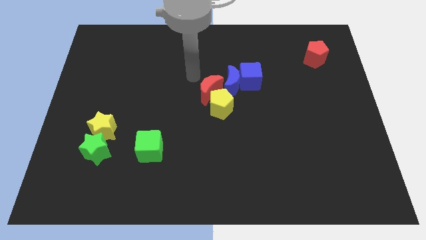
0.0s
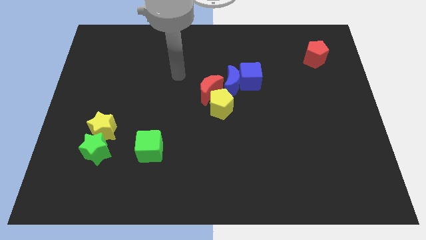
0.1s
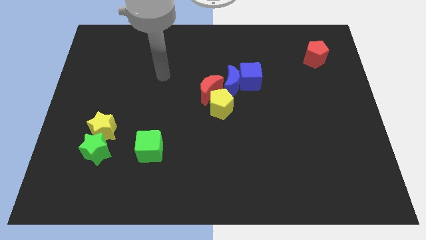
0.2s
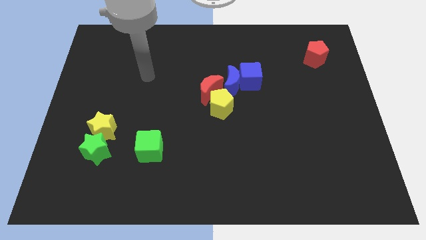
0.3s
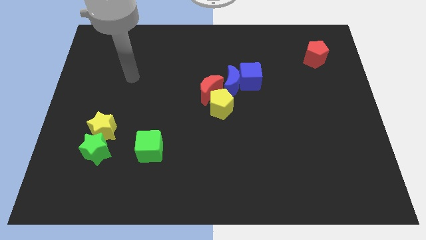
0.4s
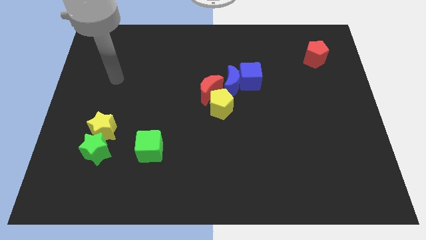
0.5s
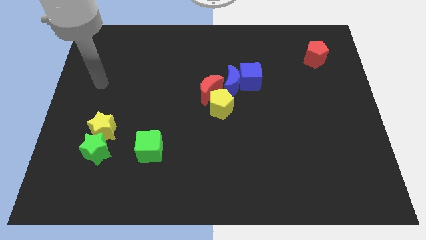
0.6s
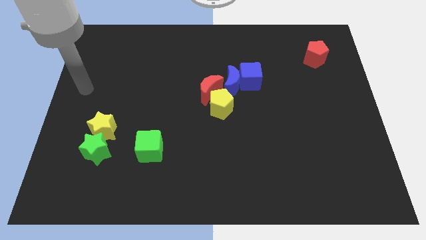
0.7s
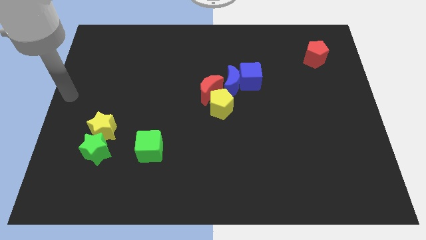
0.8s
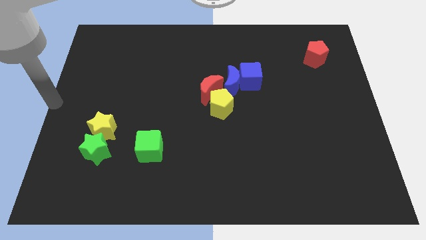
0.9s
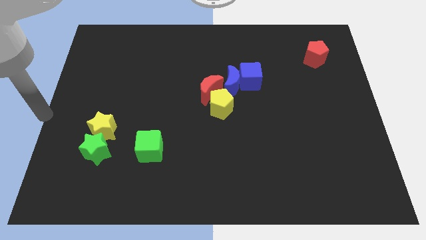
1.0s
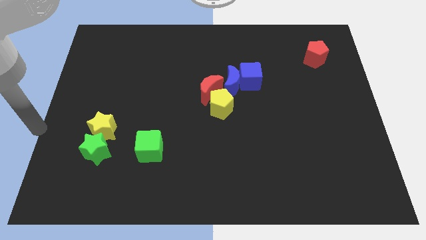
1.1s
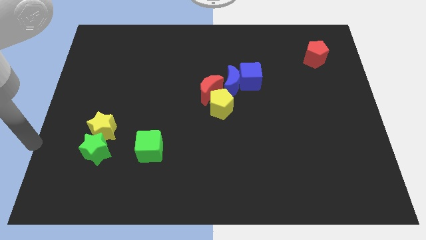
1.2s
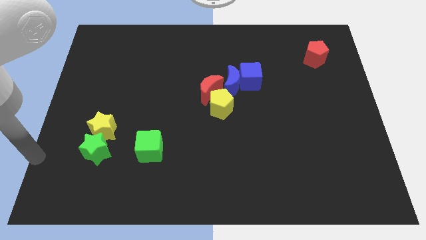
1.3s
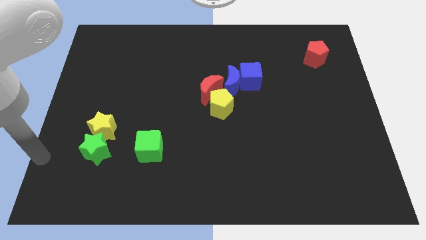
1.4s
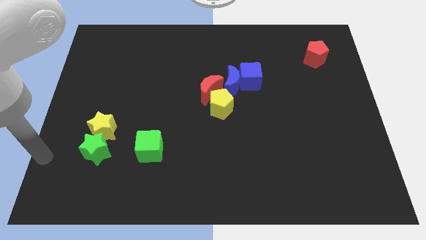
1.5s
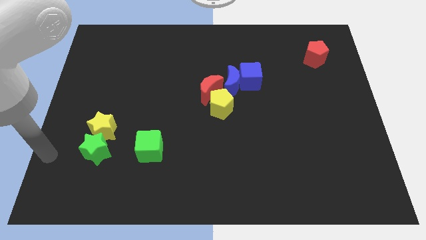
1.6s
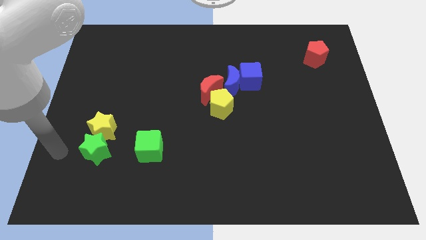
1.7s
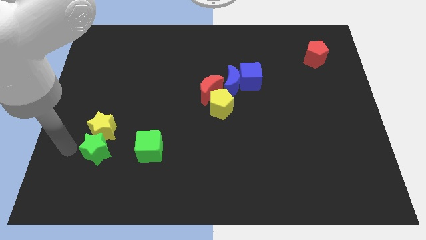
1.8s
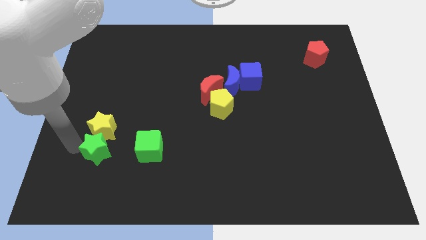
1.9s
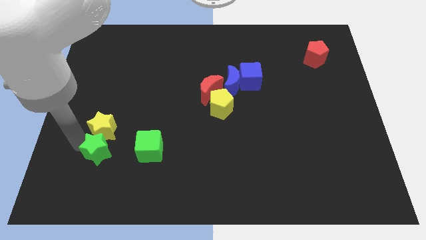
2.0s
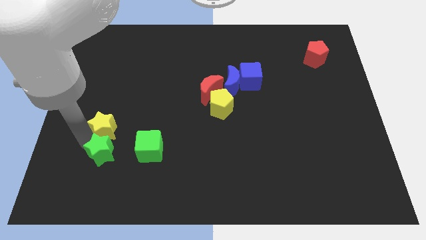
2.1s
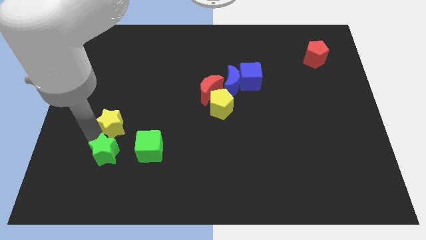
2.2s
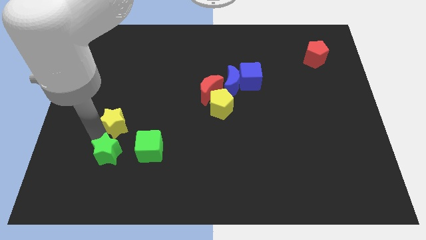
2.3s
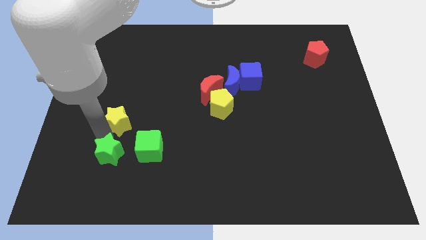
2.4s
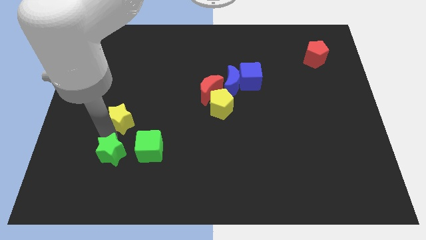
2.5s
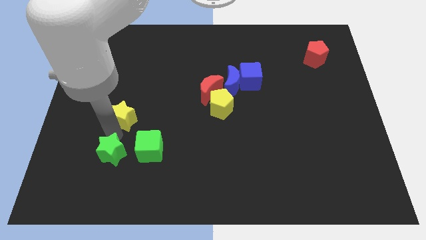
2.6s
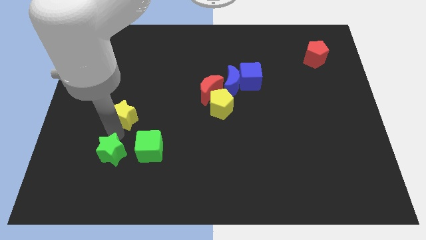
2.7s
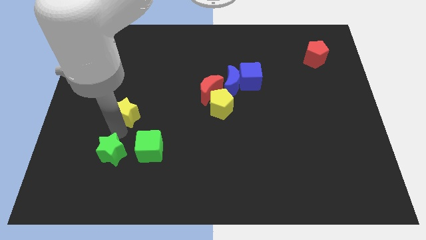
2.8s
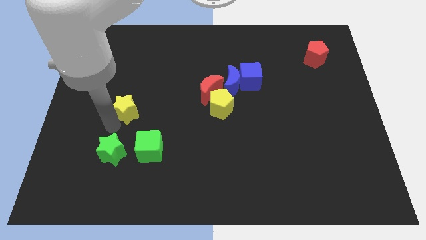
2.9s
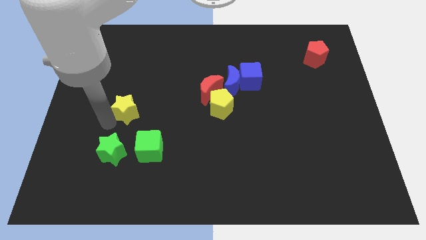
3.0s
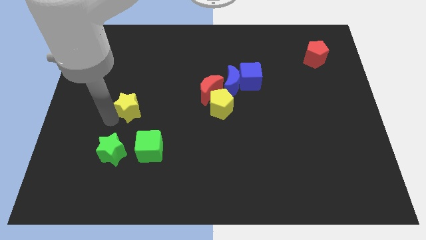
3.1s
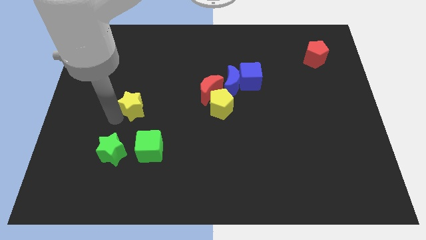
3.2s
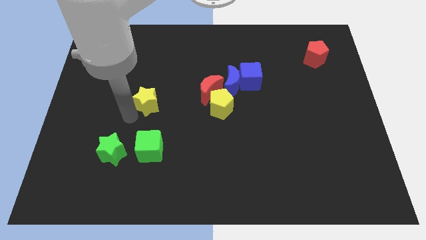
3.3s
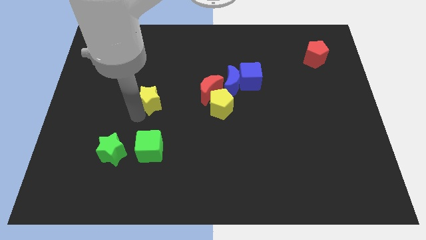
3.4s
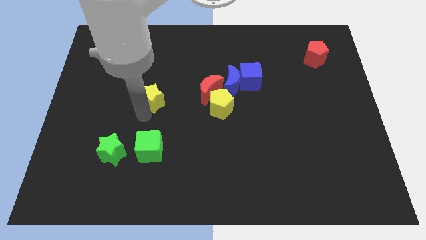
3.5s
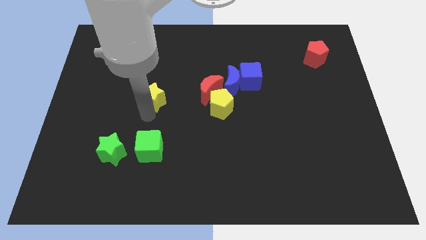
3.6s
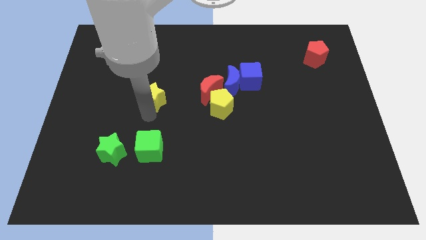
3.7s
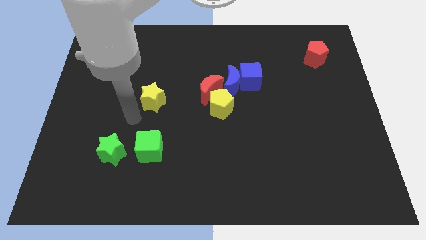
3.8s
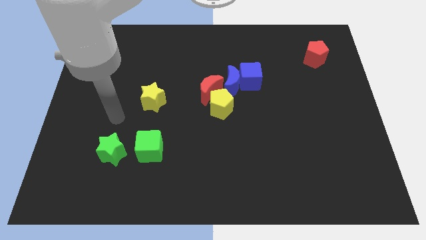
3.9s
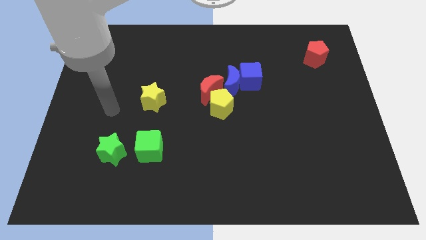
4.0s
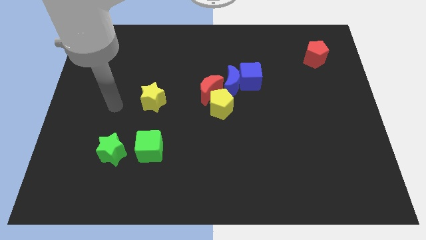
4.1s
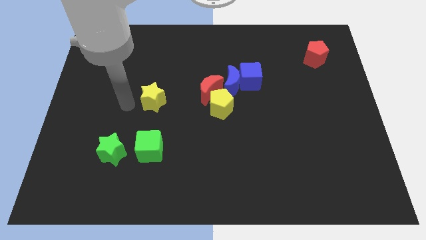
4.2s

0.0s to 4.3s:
separate the yellow and green block

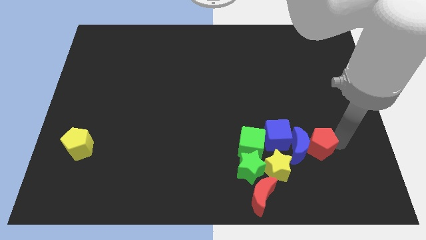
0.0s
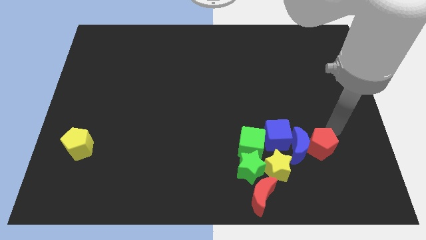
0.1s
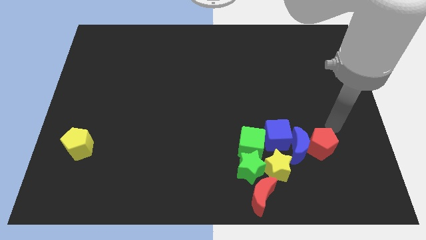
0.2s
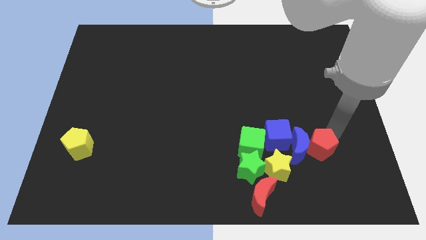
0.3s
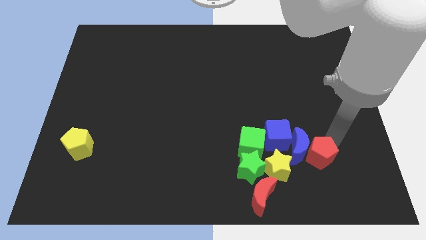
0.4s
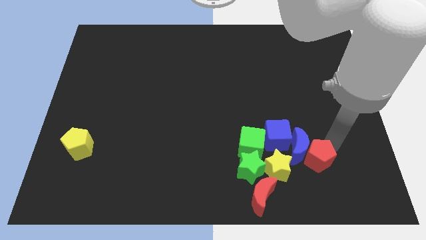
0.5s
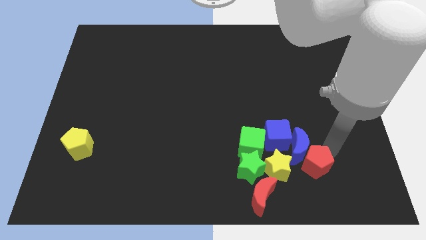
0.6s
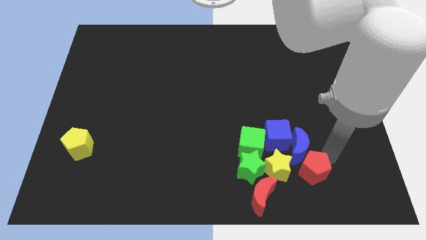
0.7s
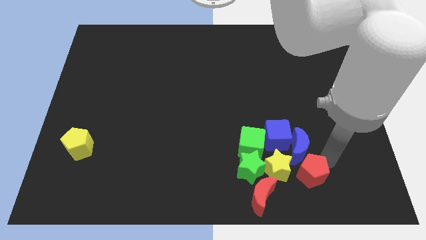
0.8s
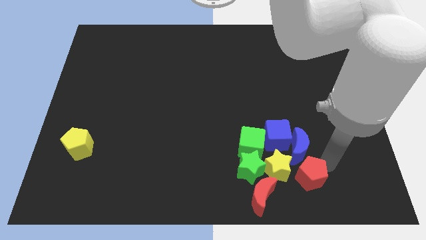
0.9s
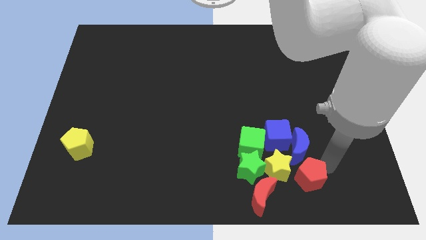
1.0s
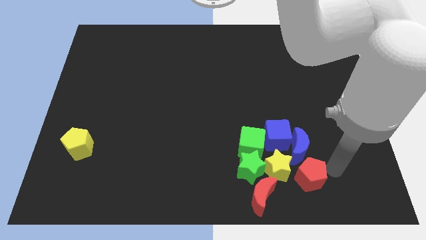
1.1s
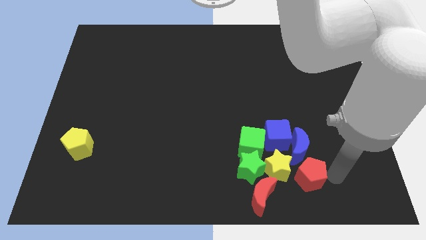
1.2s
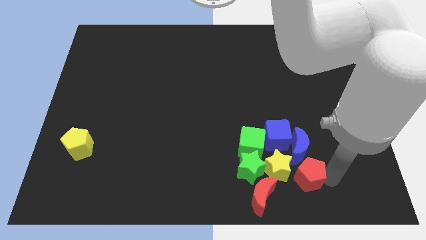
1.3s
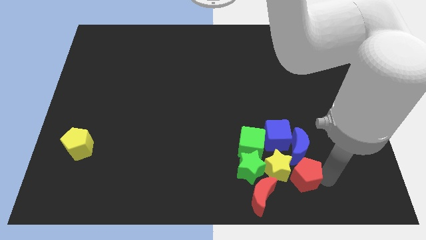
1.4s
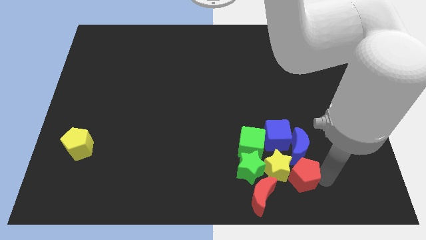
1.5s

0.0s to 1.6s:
push the red pentagon into the group of blocks

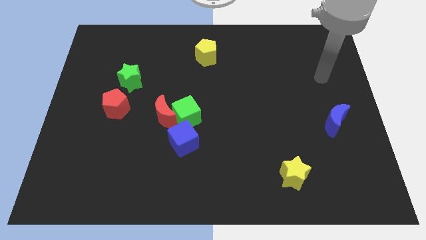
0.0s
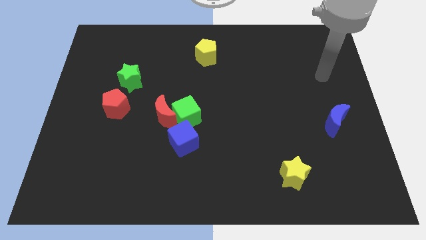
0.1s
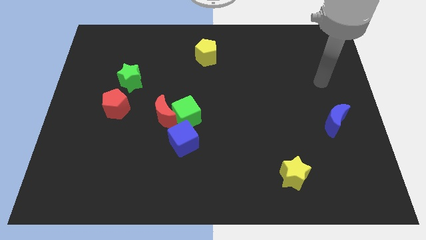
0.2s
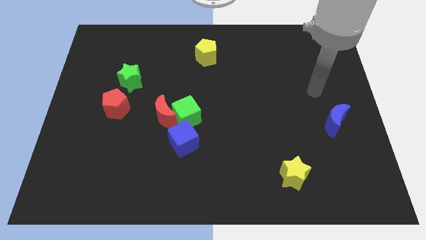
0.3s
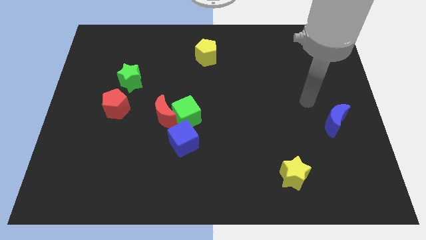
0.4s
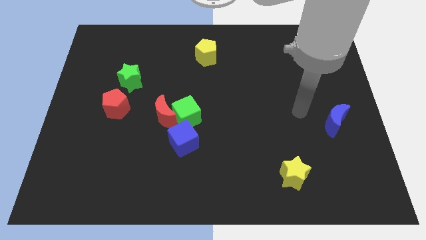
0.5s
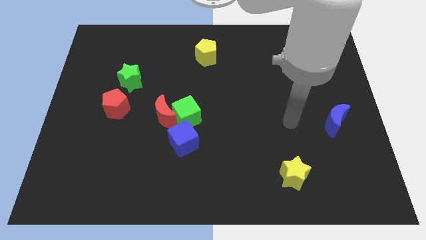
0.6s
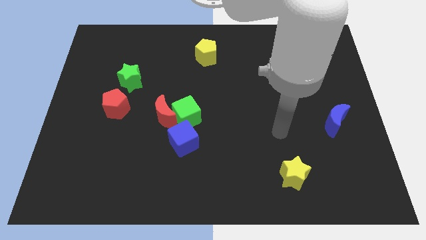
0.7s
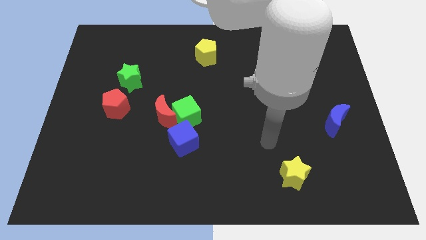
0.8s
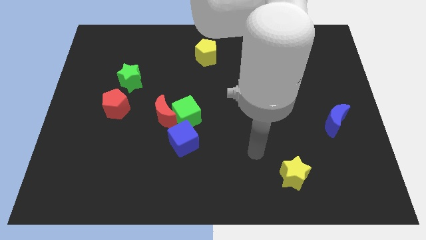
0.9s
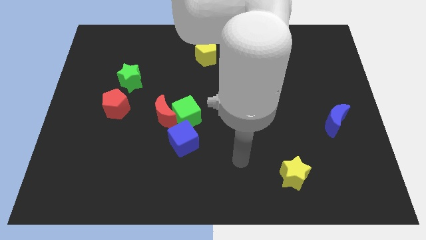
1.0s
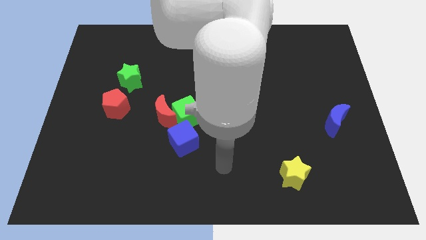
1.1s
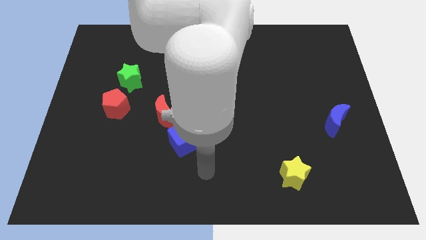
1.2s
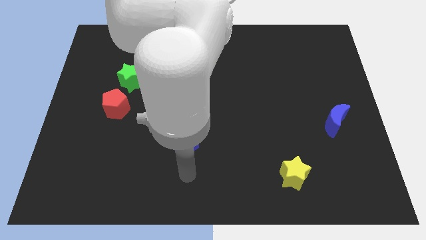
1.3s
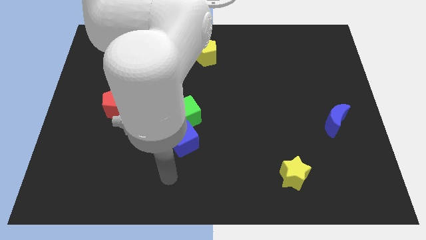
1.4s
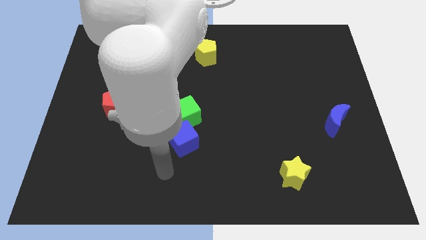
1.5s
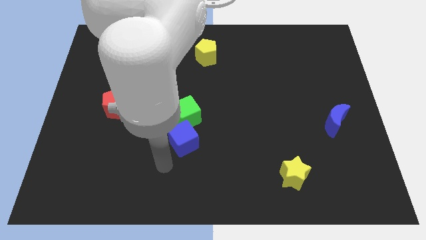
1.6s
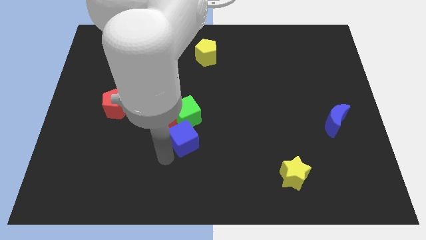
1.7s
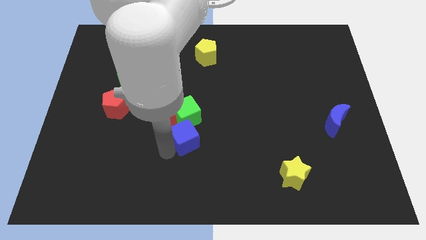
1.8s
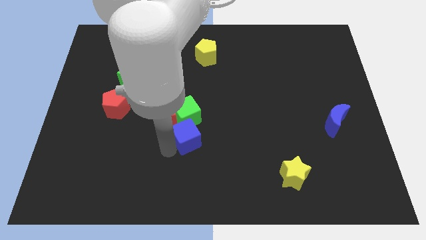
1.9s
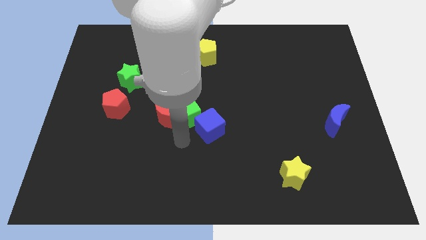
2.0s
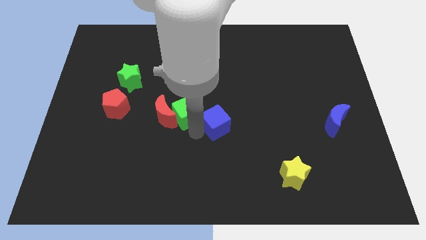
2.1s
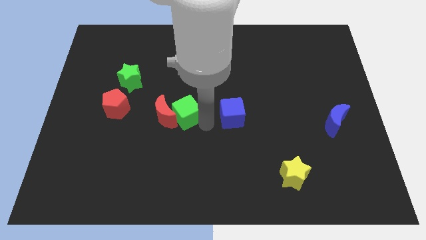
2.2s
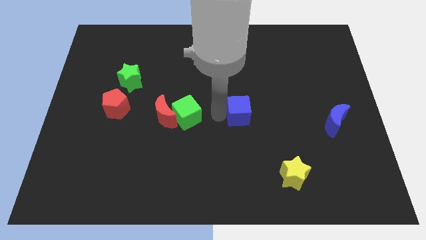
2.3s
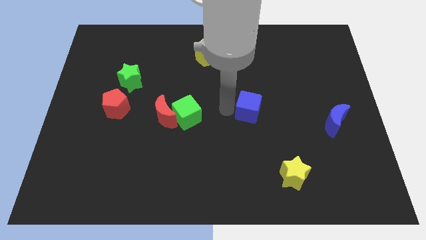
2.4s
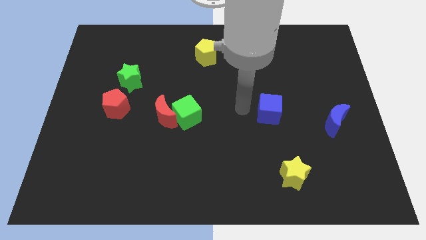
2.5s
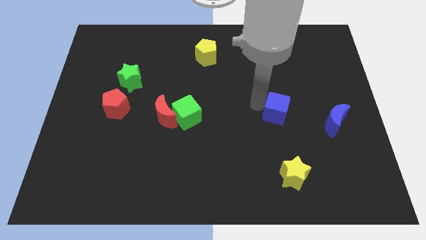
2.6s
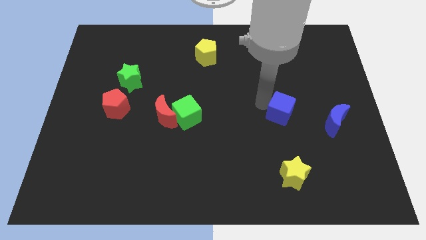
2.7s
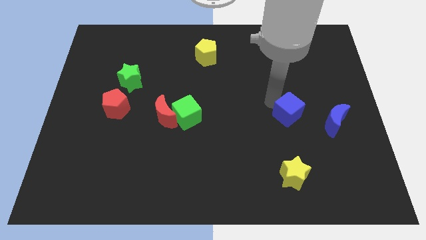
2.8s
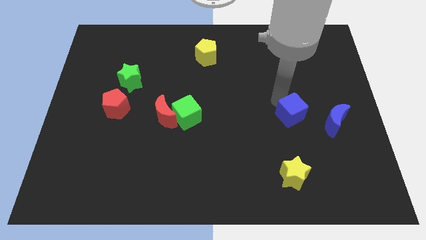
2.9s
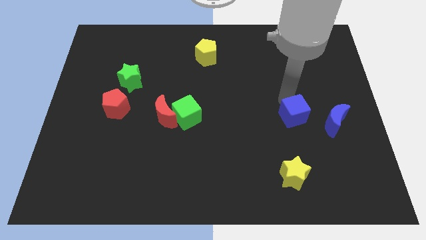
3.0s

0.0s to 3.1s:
move the blue cube to the left of blue moon
